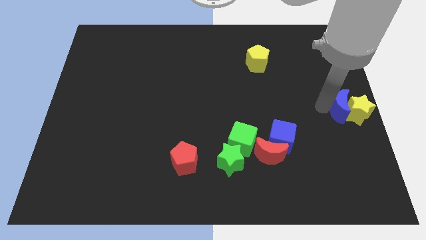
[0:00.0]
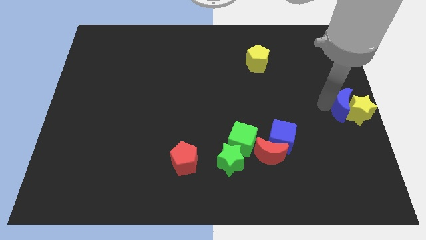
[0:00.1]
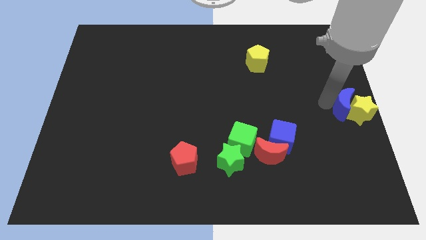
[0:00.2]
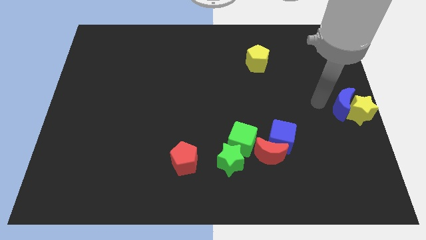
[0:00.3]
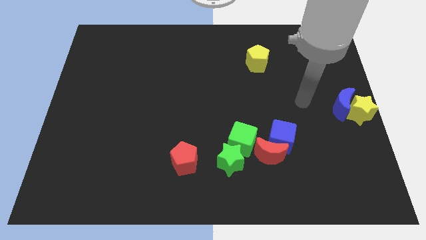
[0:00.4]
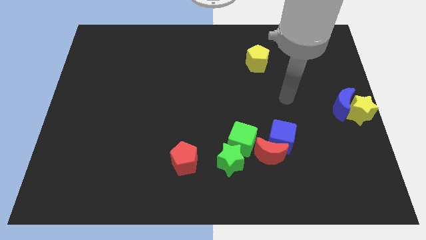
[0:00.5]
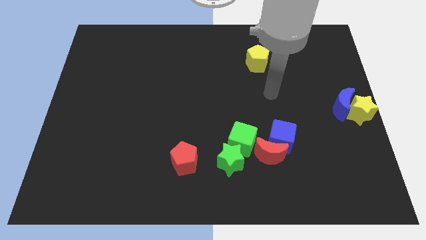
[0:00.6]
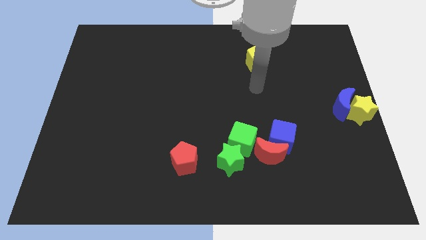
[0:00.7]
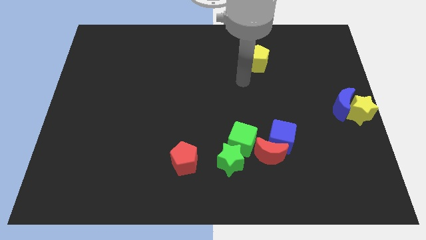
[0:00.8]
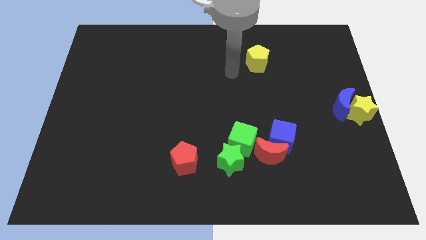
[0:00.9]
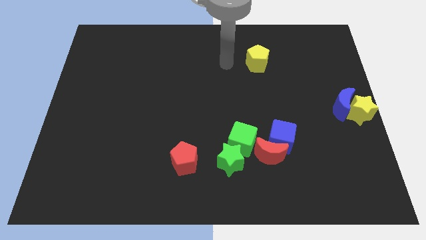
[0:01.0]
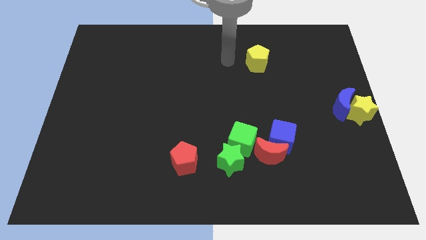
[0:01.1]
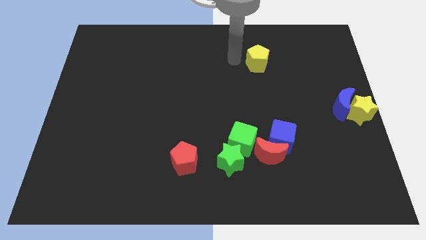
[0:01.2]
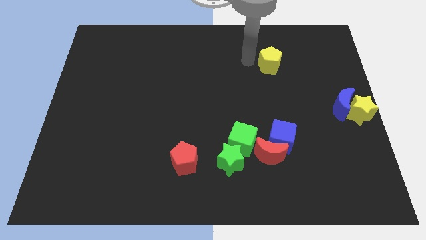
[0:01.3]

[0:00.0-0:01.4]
place the arm left to the yellow pentagon

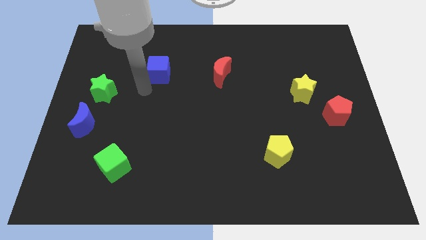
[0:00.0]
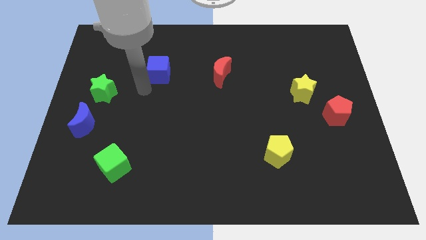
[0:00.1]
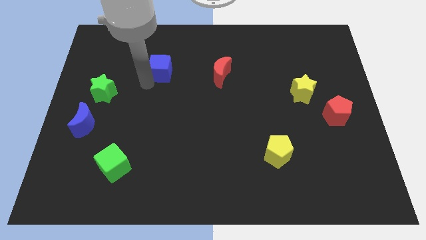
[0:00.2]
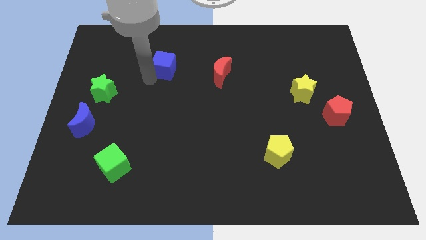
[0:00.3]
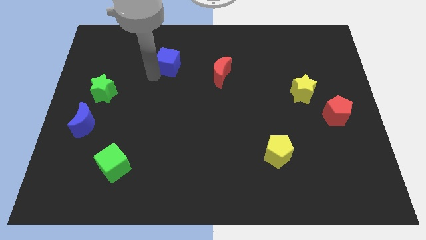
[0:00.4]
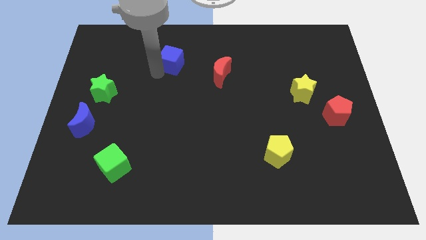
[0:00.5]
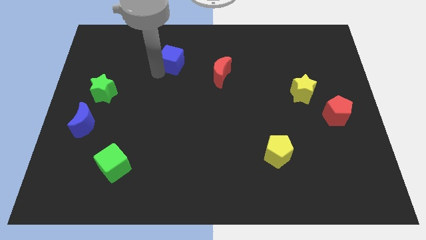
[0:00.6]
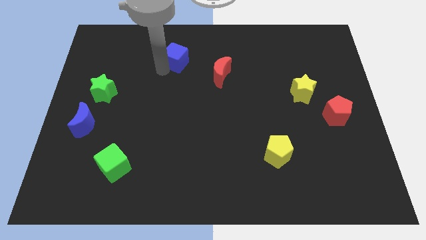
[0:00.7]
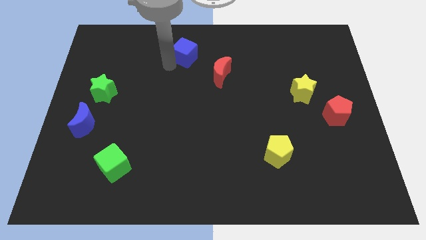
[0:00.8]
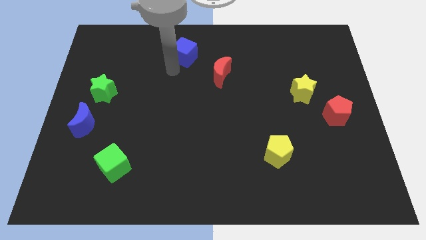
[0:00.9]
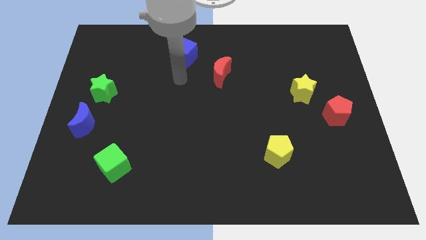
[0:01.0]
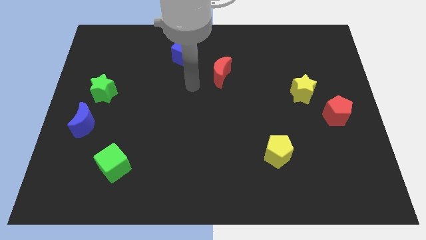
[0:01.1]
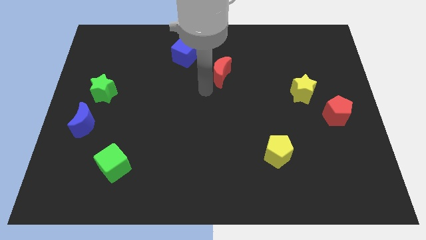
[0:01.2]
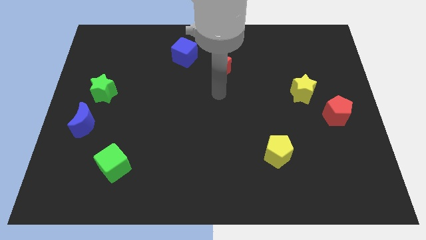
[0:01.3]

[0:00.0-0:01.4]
place blue cube to the top left of red moon

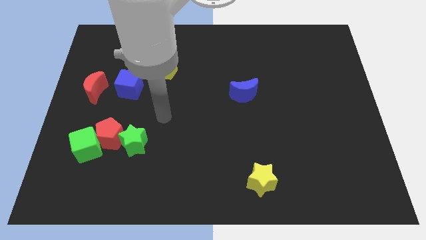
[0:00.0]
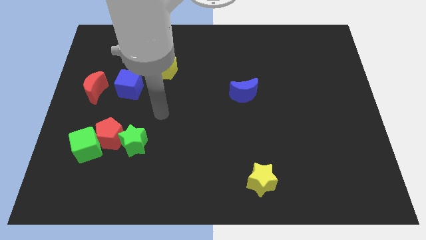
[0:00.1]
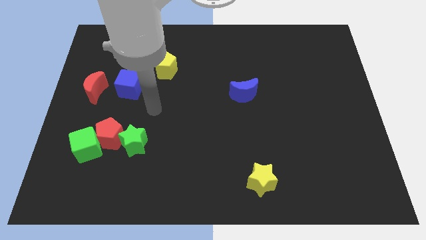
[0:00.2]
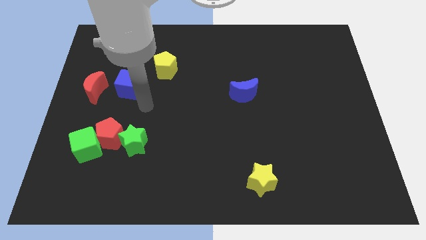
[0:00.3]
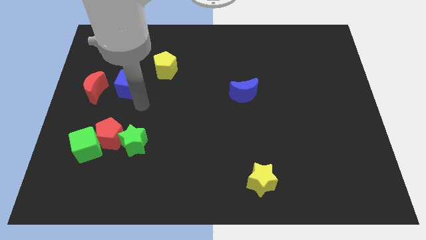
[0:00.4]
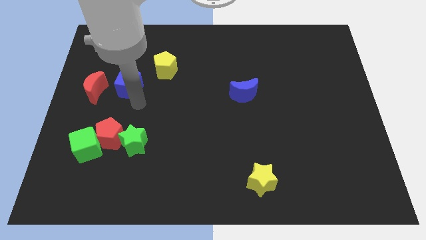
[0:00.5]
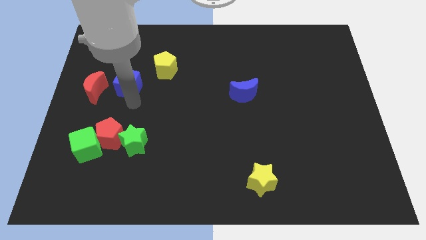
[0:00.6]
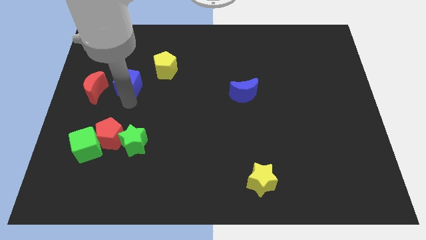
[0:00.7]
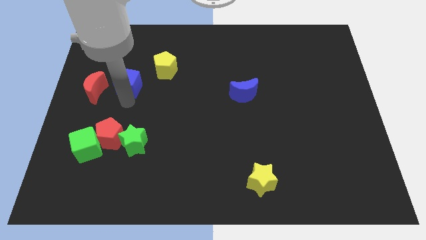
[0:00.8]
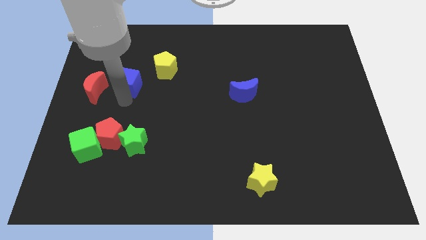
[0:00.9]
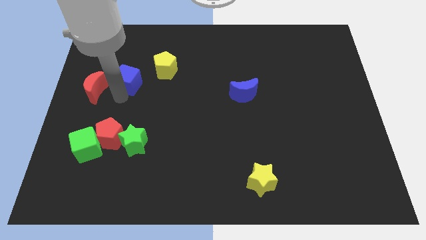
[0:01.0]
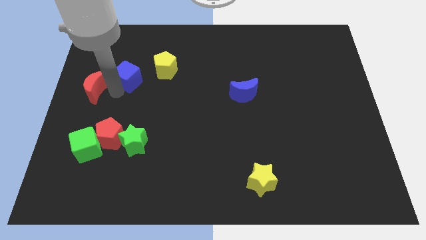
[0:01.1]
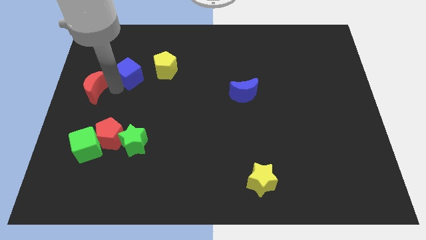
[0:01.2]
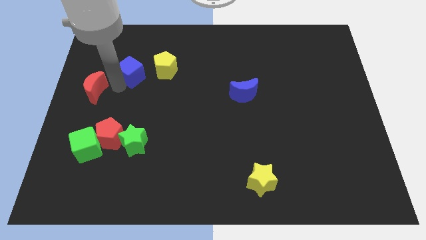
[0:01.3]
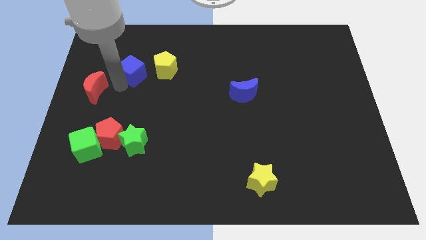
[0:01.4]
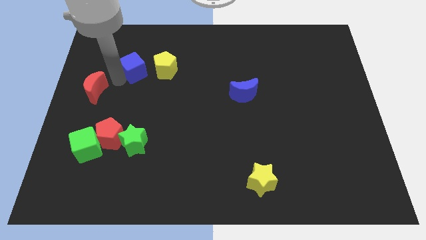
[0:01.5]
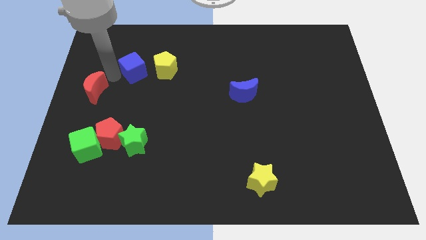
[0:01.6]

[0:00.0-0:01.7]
move the blue cube to the left of yellow pentagon

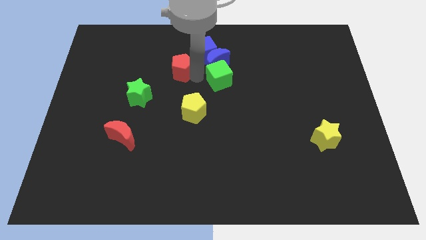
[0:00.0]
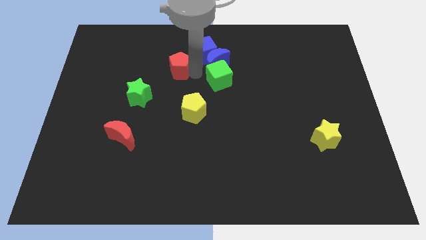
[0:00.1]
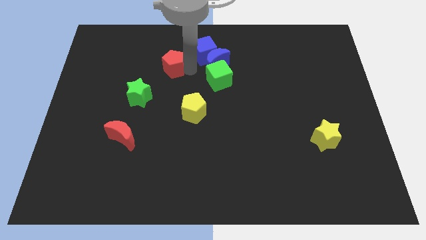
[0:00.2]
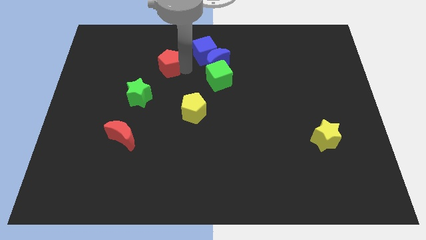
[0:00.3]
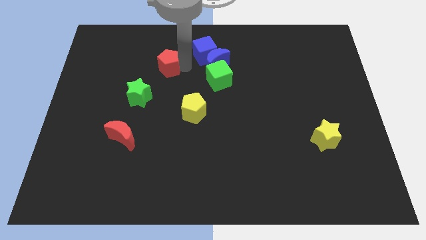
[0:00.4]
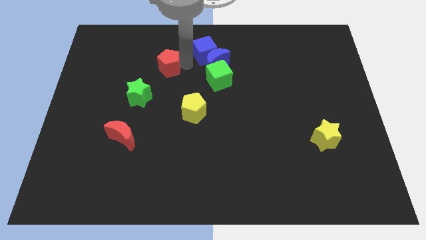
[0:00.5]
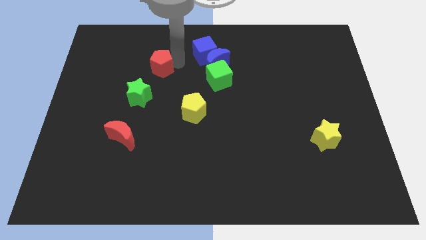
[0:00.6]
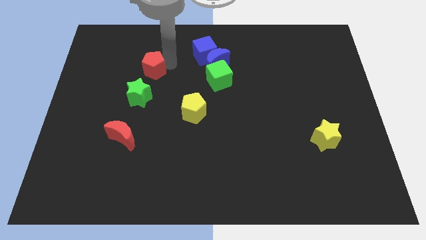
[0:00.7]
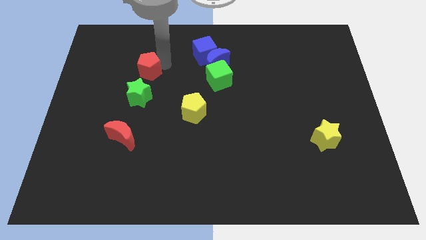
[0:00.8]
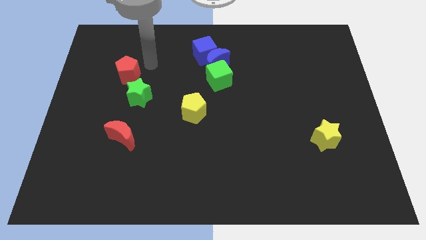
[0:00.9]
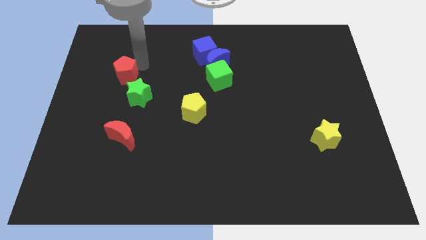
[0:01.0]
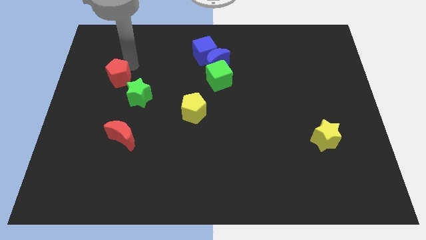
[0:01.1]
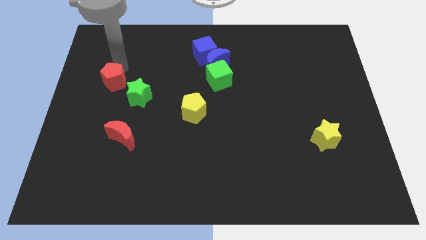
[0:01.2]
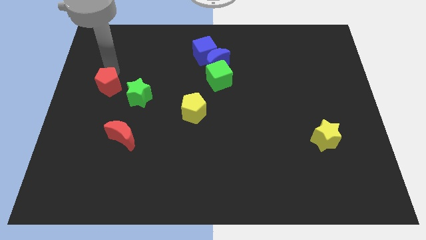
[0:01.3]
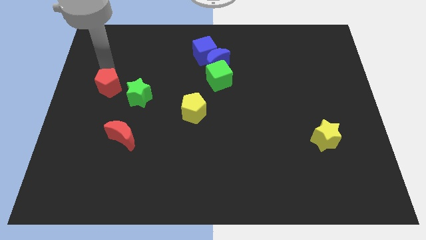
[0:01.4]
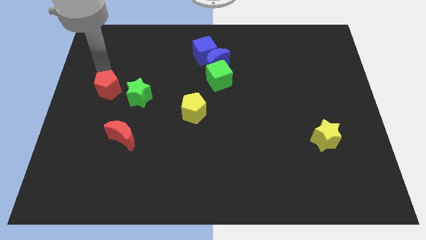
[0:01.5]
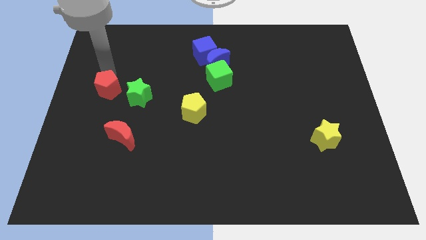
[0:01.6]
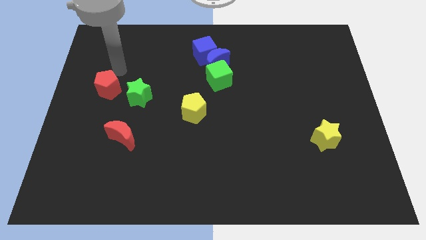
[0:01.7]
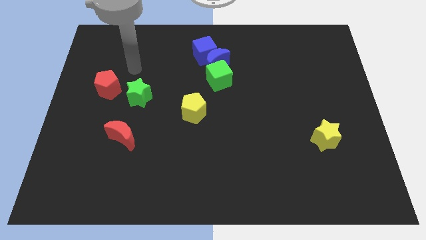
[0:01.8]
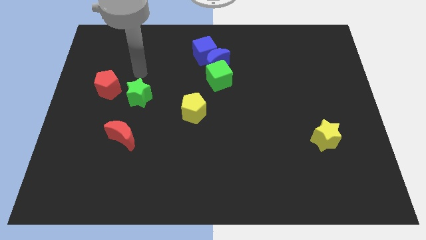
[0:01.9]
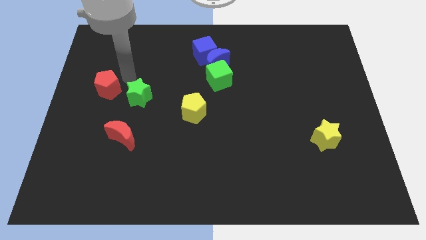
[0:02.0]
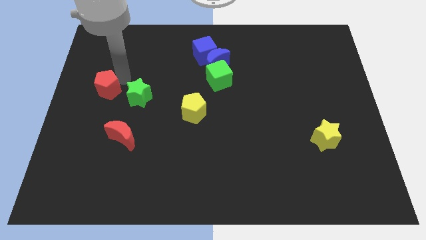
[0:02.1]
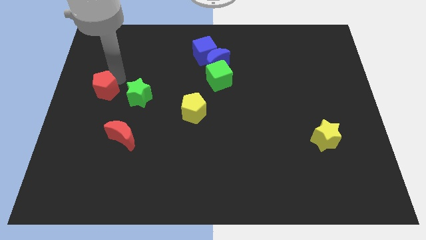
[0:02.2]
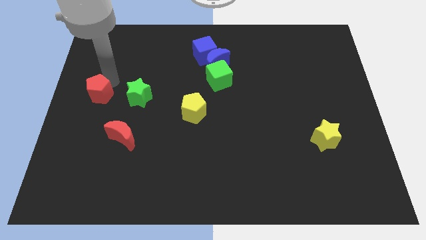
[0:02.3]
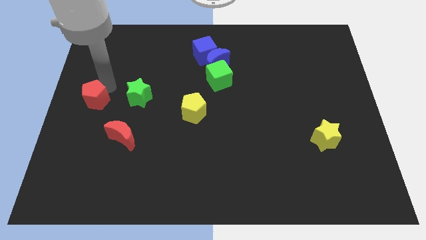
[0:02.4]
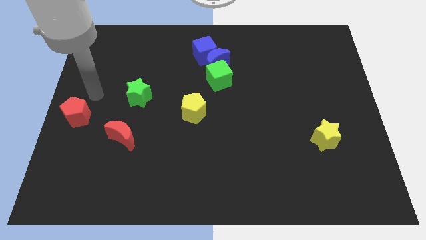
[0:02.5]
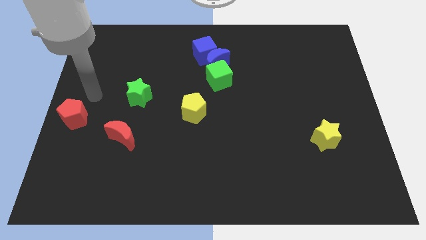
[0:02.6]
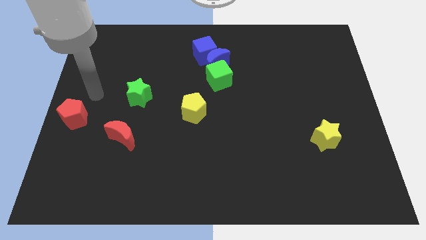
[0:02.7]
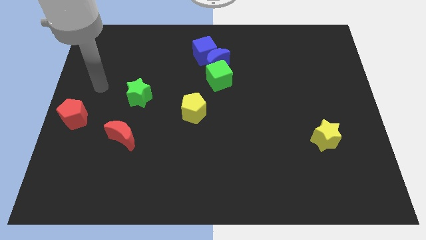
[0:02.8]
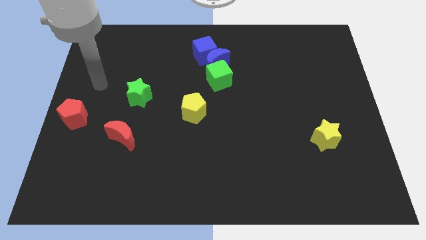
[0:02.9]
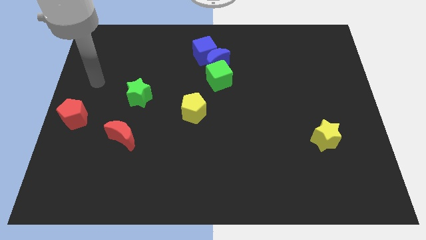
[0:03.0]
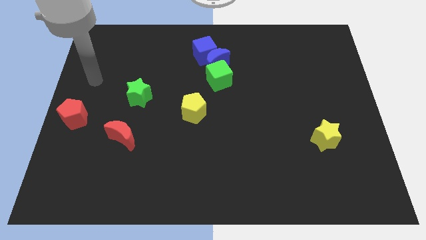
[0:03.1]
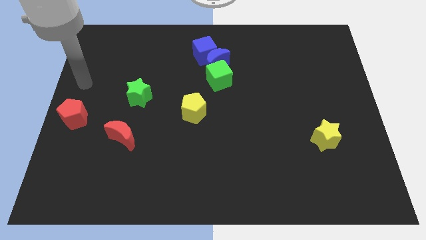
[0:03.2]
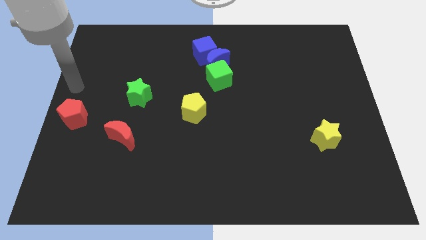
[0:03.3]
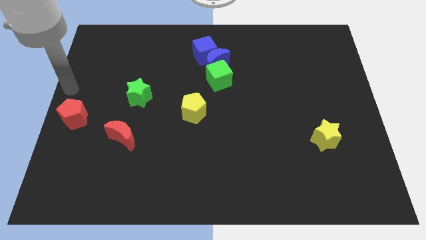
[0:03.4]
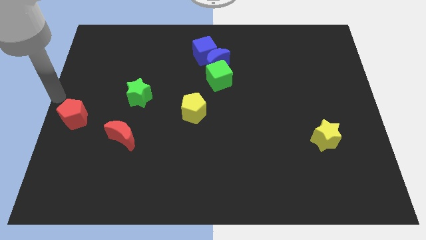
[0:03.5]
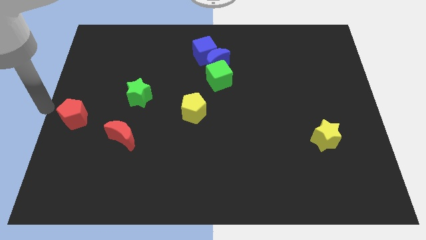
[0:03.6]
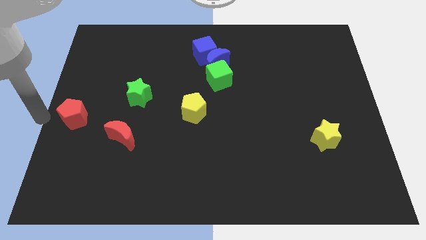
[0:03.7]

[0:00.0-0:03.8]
move the red pentagon to the left center of the board

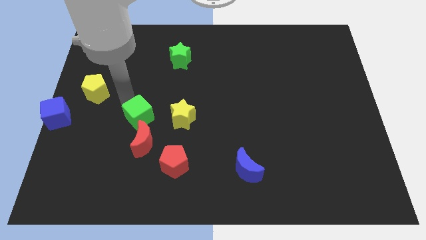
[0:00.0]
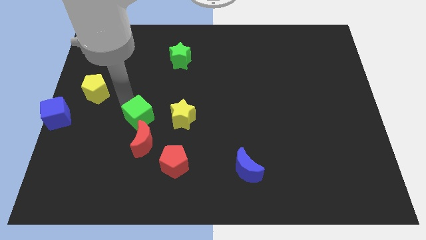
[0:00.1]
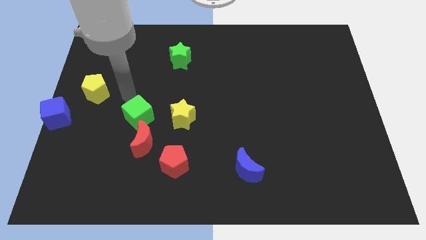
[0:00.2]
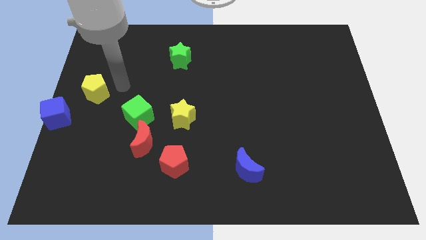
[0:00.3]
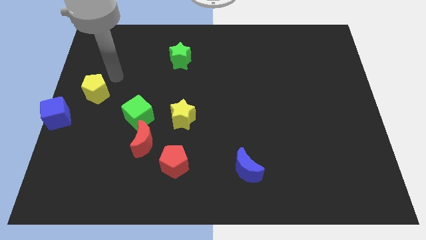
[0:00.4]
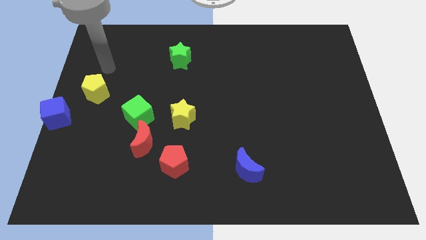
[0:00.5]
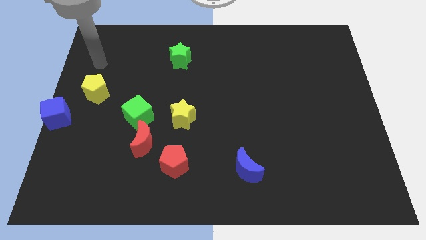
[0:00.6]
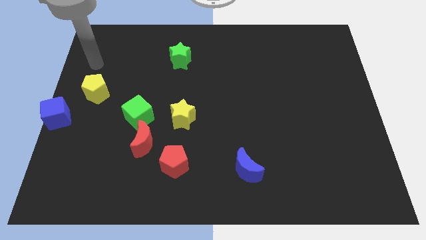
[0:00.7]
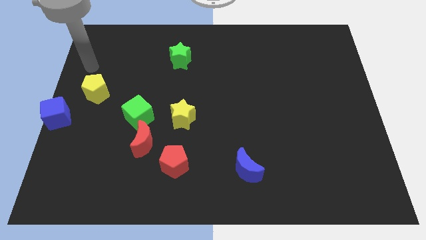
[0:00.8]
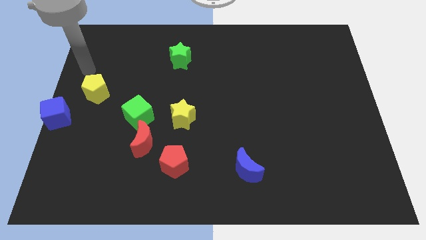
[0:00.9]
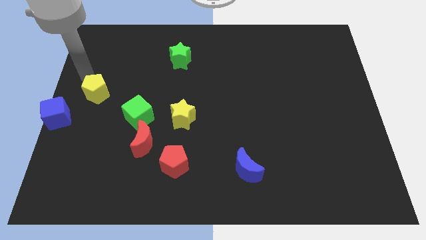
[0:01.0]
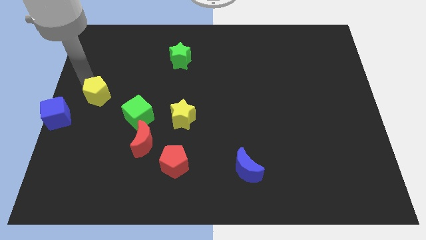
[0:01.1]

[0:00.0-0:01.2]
place your arm at the top of yellow pentagon
